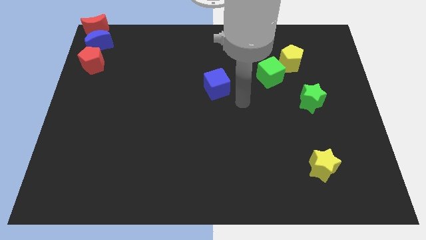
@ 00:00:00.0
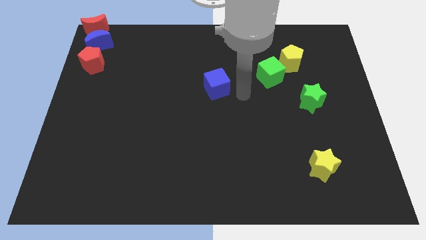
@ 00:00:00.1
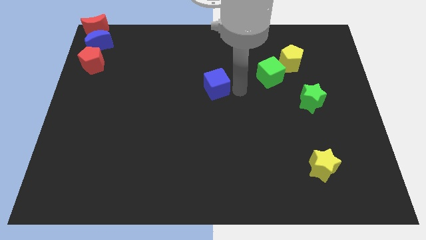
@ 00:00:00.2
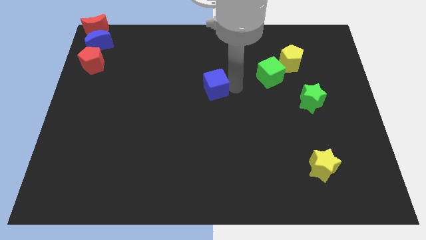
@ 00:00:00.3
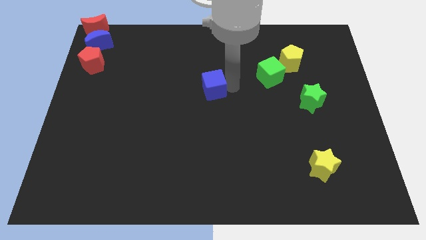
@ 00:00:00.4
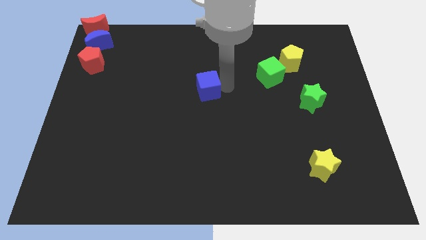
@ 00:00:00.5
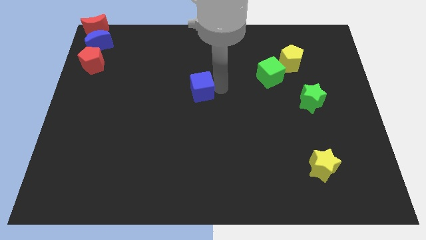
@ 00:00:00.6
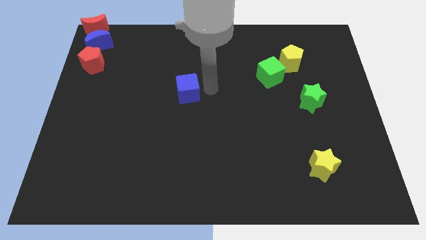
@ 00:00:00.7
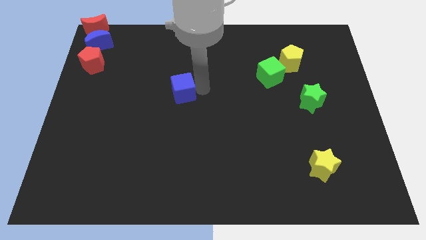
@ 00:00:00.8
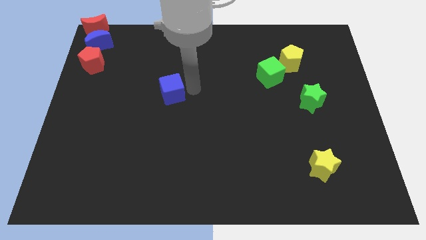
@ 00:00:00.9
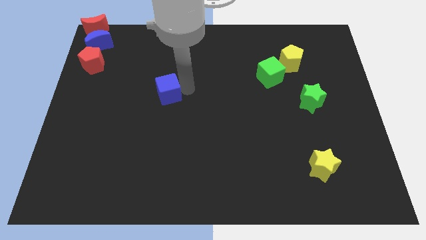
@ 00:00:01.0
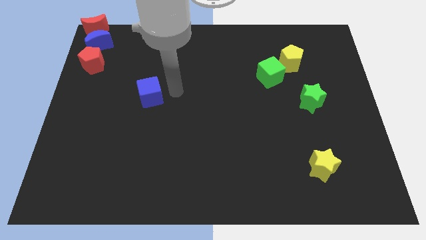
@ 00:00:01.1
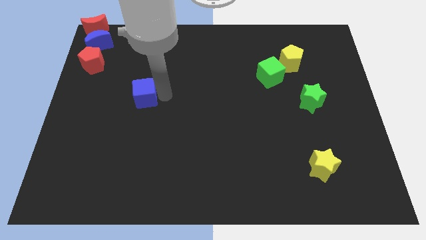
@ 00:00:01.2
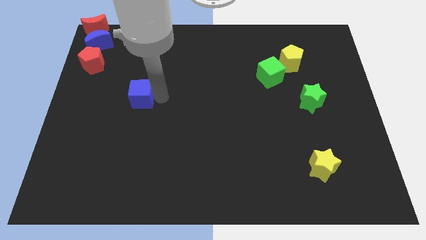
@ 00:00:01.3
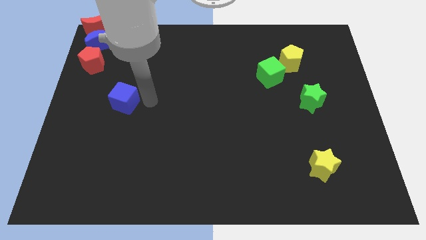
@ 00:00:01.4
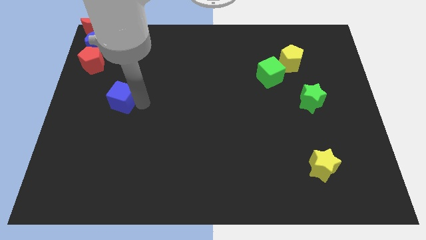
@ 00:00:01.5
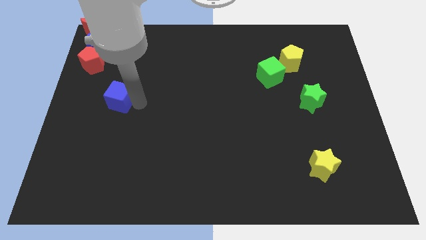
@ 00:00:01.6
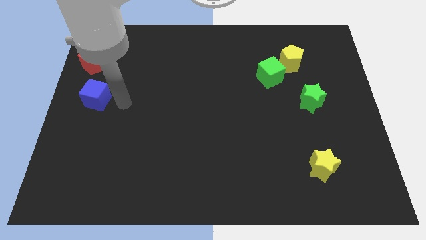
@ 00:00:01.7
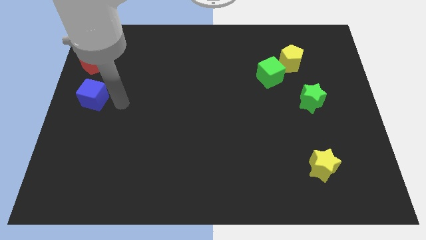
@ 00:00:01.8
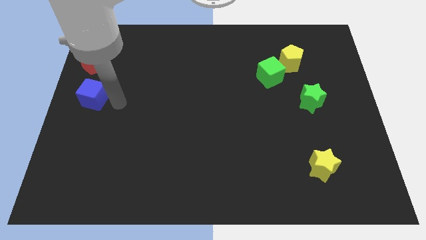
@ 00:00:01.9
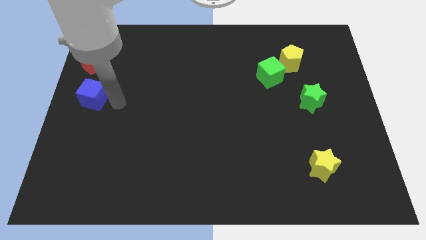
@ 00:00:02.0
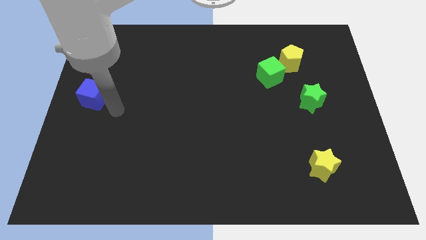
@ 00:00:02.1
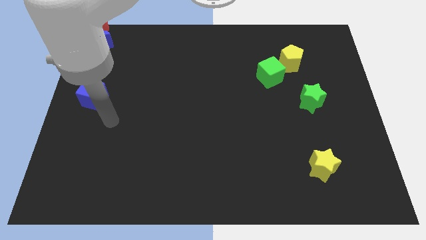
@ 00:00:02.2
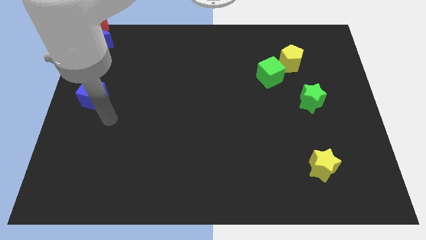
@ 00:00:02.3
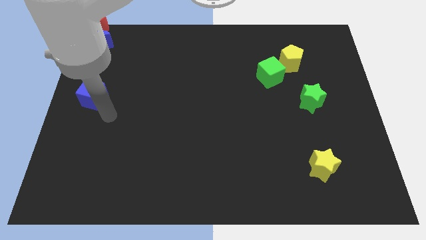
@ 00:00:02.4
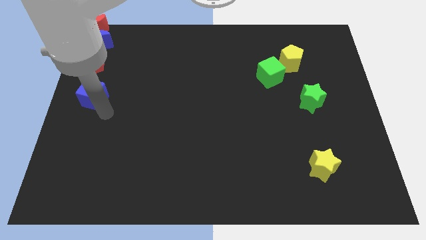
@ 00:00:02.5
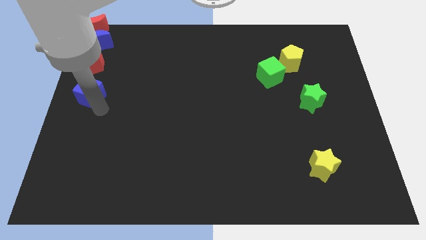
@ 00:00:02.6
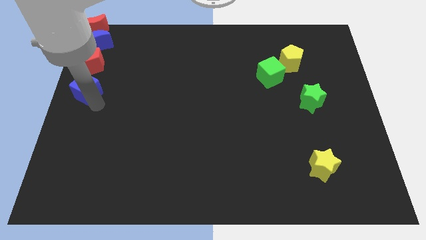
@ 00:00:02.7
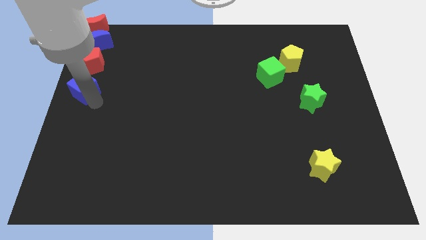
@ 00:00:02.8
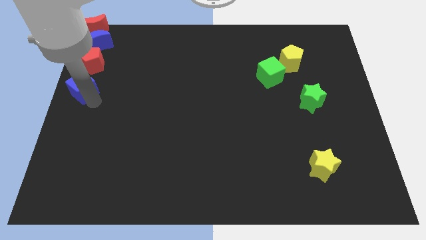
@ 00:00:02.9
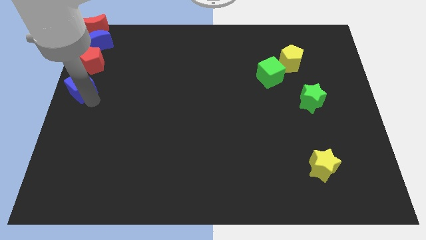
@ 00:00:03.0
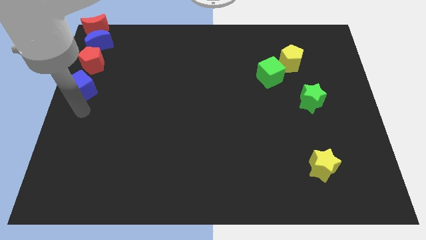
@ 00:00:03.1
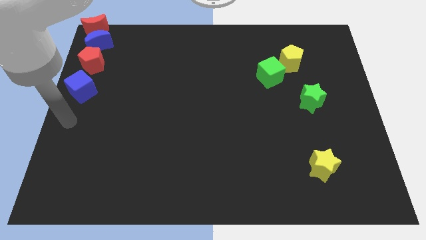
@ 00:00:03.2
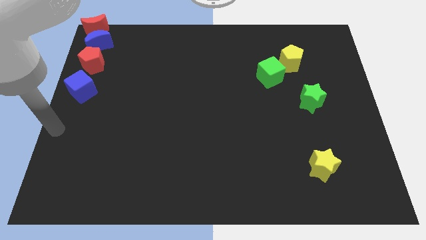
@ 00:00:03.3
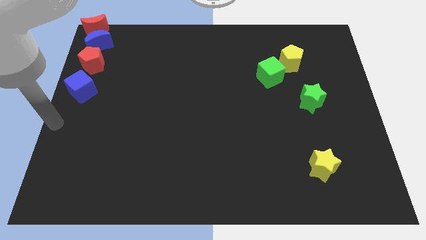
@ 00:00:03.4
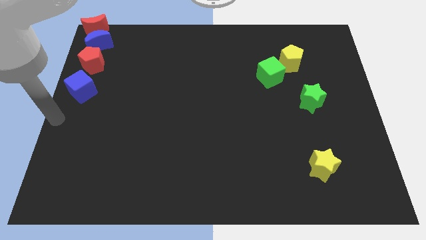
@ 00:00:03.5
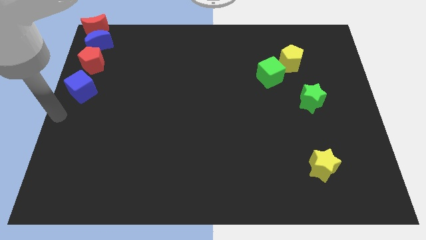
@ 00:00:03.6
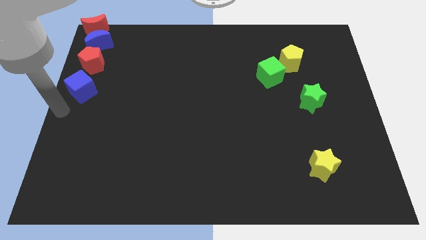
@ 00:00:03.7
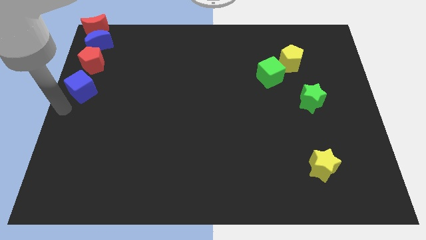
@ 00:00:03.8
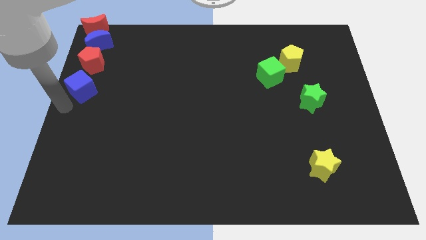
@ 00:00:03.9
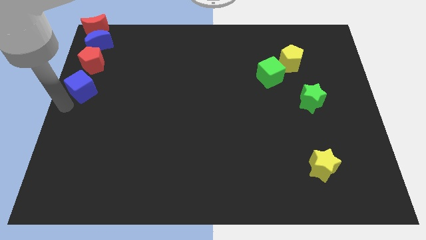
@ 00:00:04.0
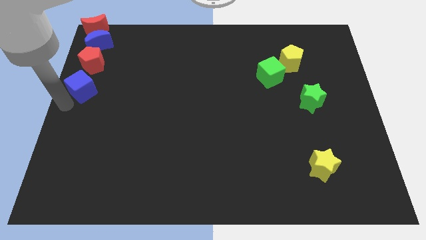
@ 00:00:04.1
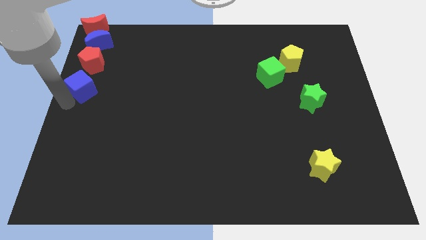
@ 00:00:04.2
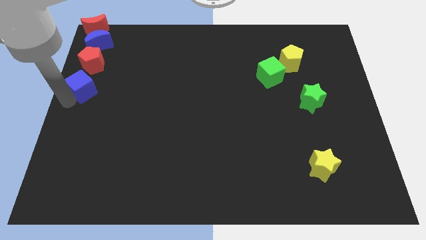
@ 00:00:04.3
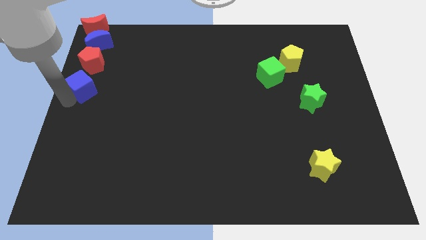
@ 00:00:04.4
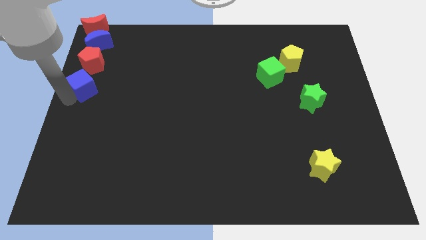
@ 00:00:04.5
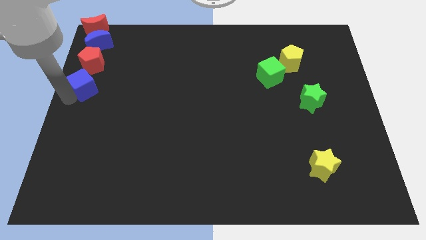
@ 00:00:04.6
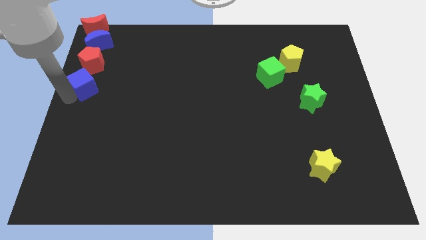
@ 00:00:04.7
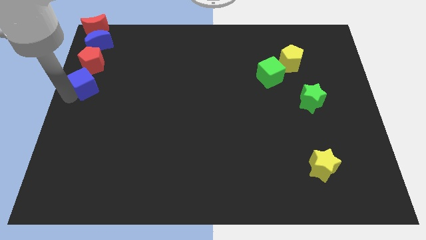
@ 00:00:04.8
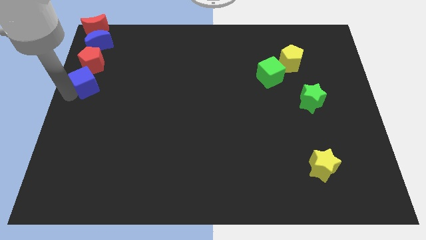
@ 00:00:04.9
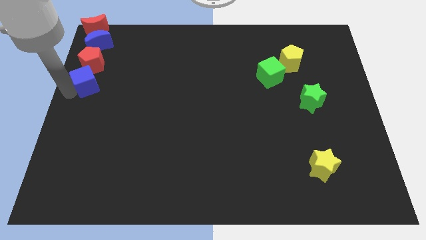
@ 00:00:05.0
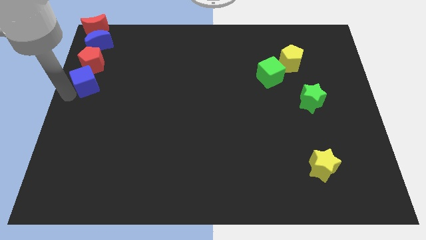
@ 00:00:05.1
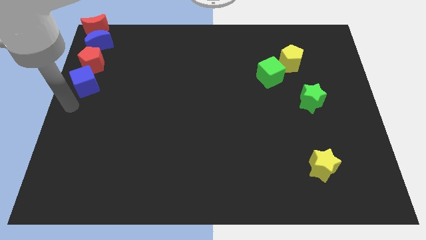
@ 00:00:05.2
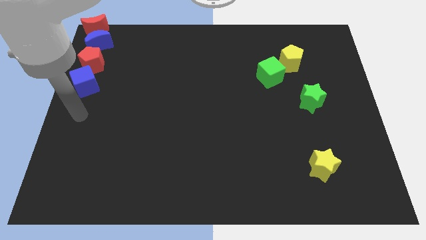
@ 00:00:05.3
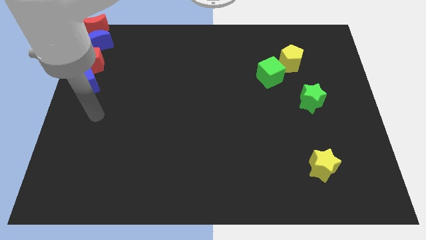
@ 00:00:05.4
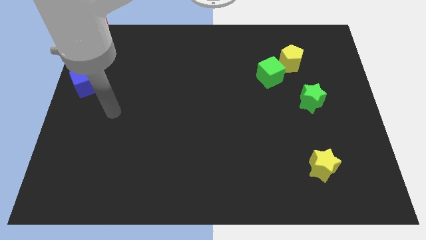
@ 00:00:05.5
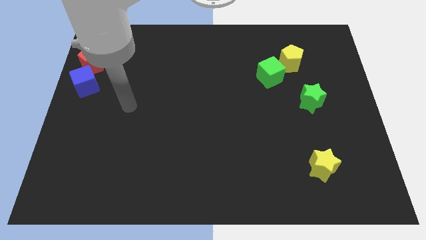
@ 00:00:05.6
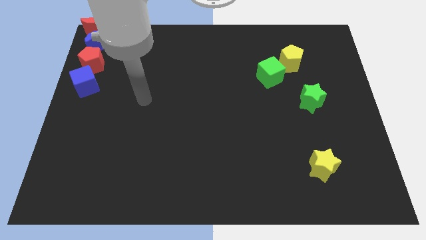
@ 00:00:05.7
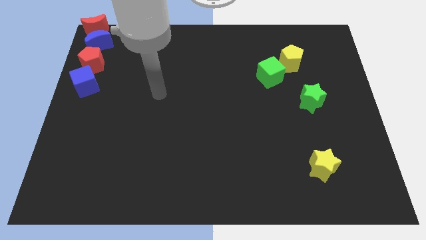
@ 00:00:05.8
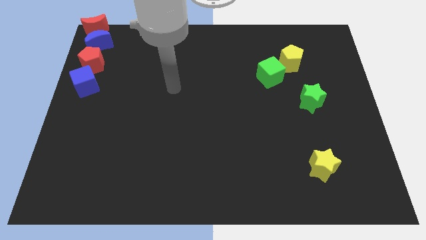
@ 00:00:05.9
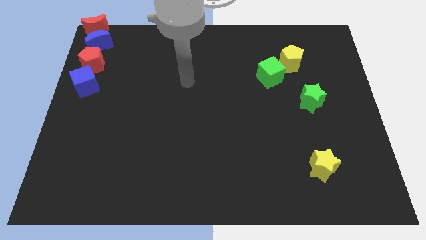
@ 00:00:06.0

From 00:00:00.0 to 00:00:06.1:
place blue cube down to the red pentagon

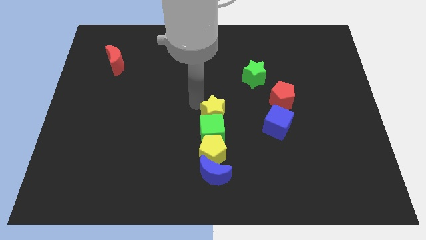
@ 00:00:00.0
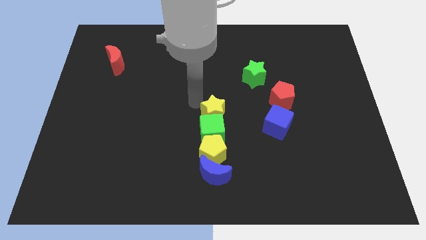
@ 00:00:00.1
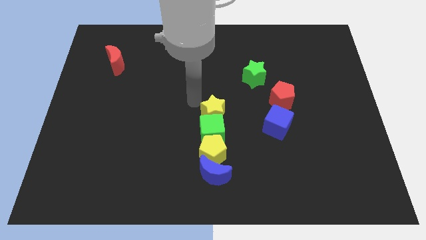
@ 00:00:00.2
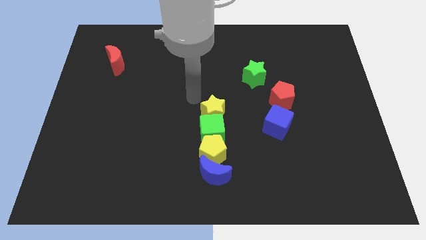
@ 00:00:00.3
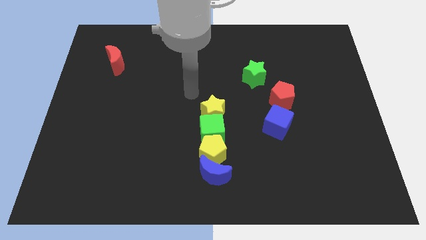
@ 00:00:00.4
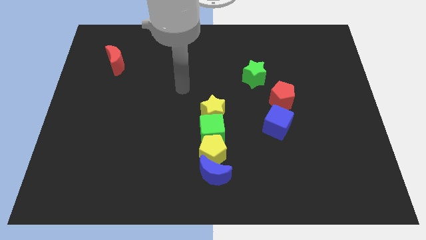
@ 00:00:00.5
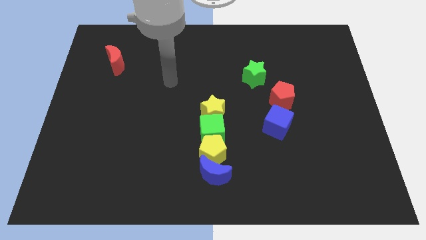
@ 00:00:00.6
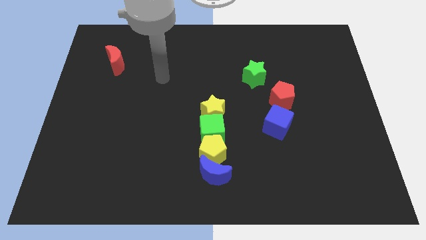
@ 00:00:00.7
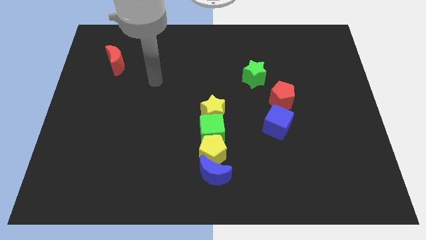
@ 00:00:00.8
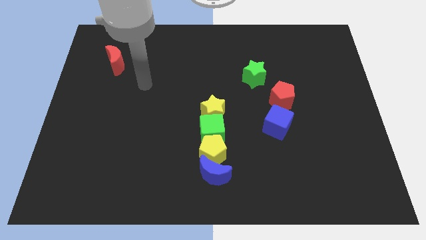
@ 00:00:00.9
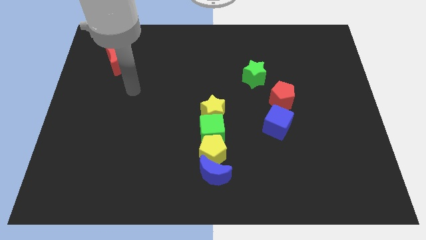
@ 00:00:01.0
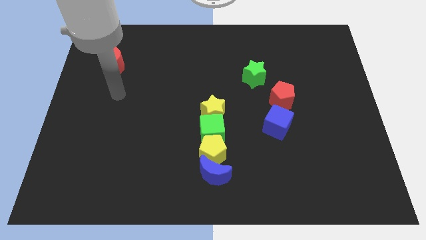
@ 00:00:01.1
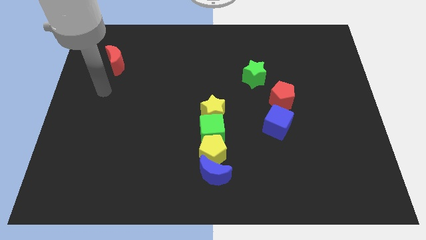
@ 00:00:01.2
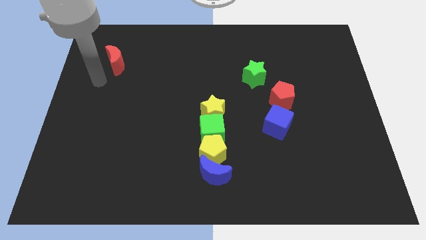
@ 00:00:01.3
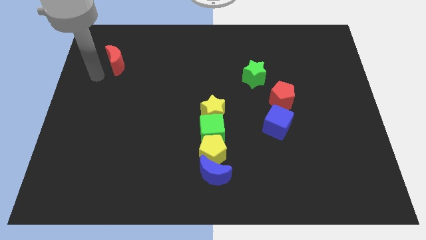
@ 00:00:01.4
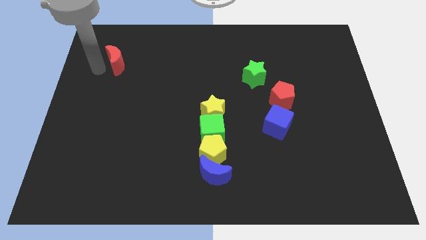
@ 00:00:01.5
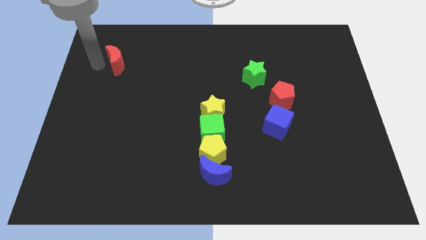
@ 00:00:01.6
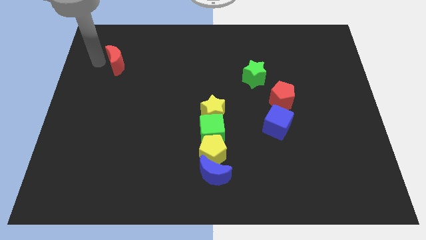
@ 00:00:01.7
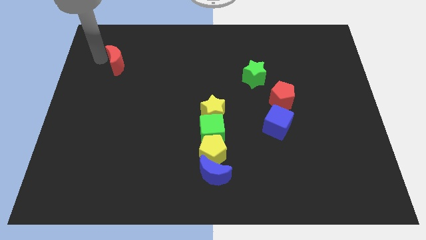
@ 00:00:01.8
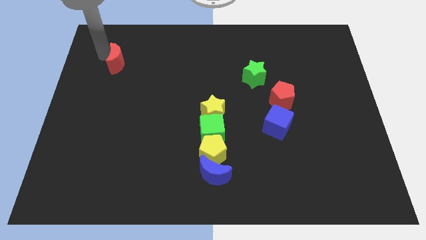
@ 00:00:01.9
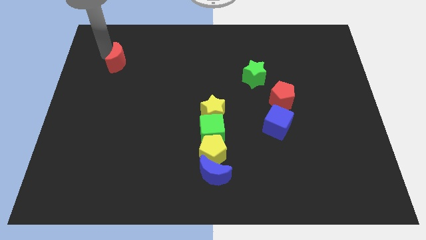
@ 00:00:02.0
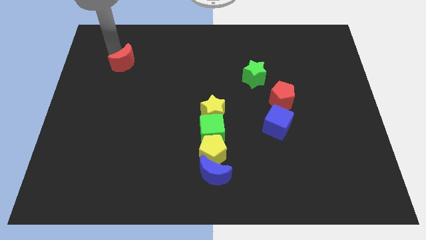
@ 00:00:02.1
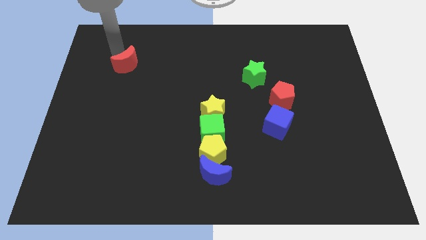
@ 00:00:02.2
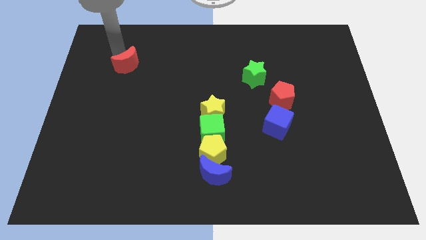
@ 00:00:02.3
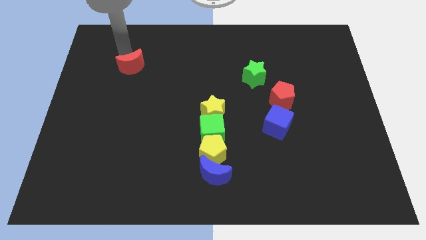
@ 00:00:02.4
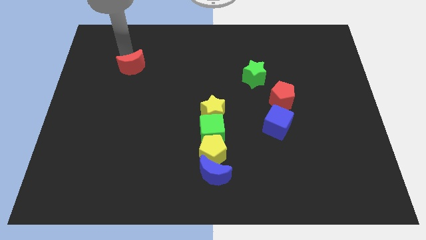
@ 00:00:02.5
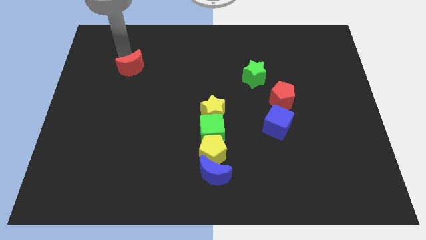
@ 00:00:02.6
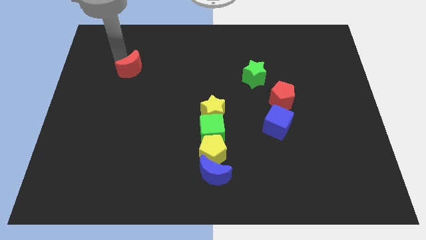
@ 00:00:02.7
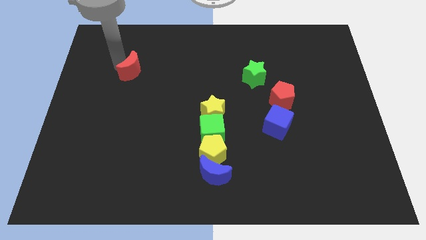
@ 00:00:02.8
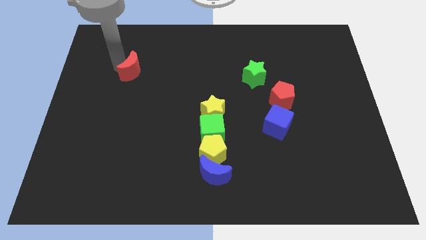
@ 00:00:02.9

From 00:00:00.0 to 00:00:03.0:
move the arm away from the yellow star
